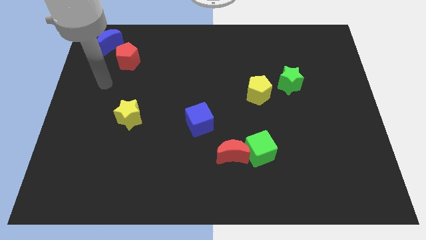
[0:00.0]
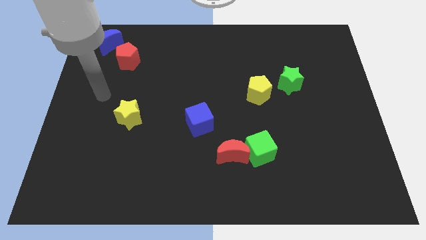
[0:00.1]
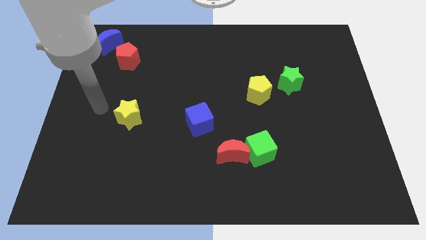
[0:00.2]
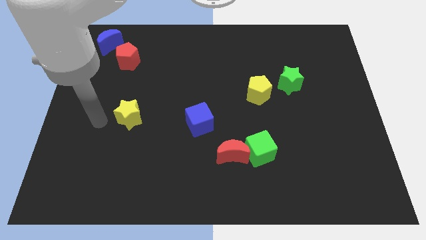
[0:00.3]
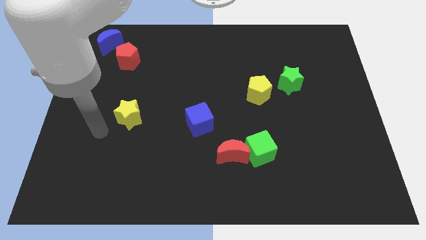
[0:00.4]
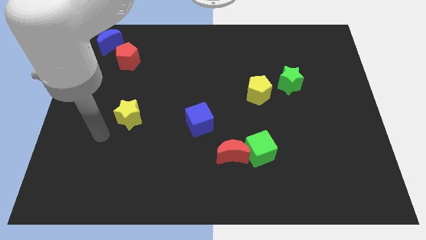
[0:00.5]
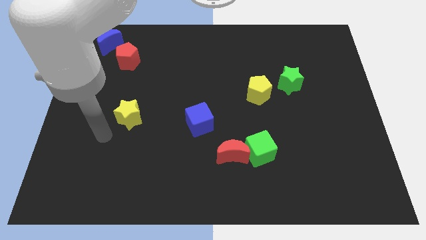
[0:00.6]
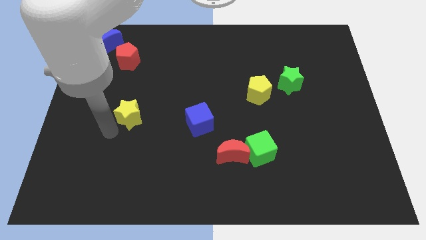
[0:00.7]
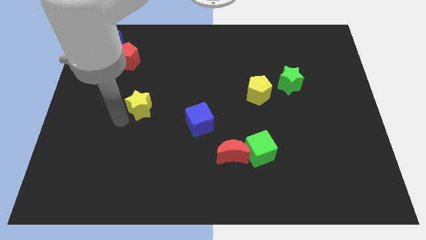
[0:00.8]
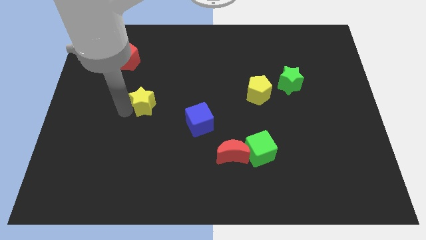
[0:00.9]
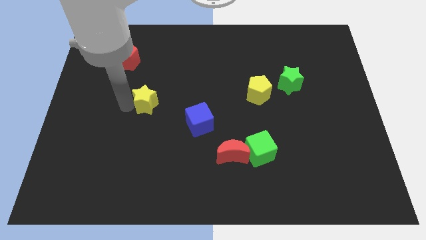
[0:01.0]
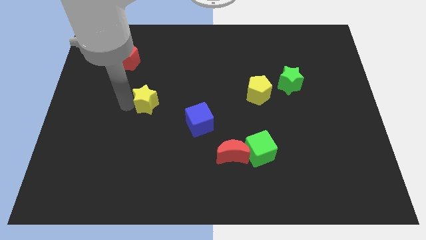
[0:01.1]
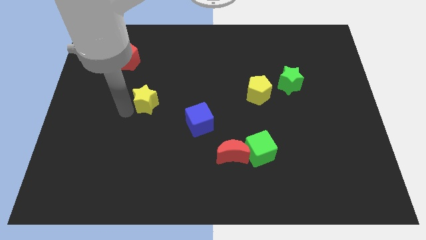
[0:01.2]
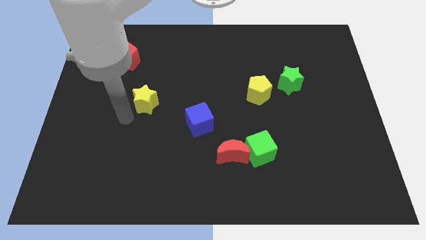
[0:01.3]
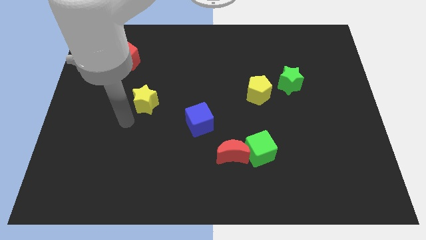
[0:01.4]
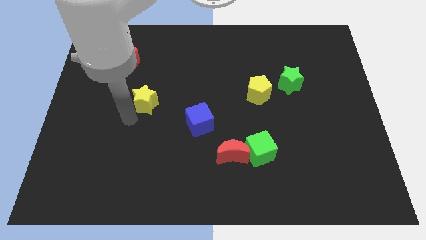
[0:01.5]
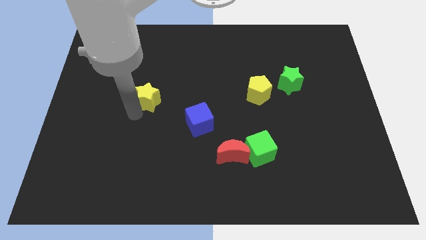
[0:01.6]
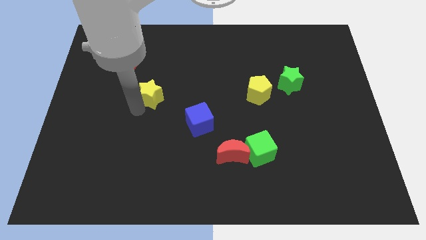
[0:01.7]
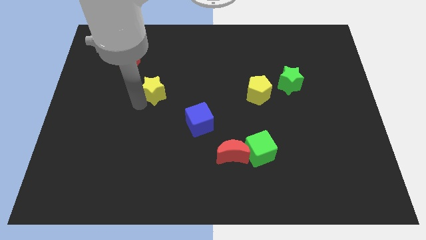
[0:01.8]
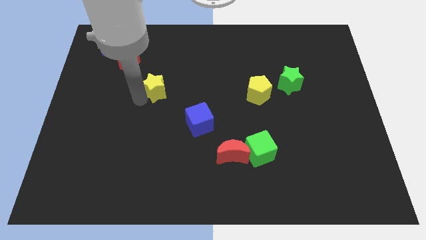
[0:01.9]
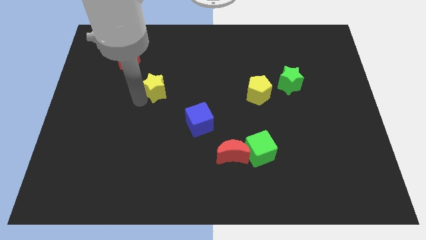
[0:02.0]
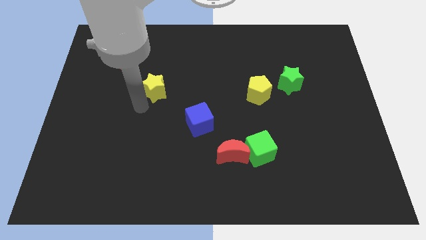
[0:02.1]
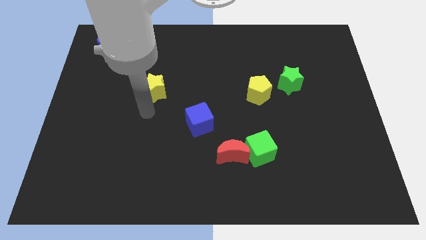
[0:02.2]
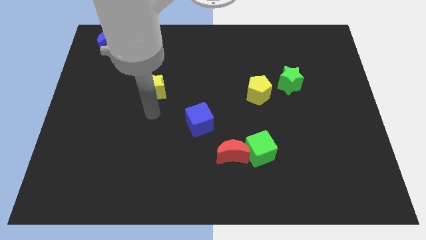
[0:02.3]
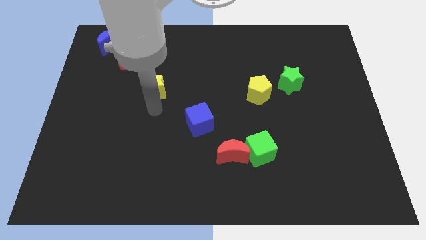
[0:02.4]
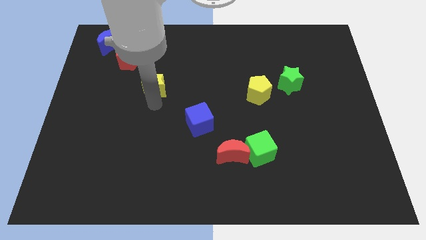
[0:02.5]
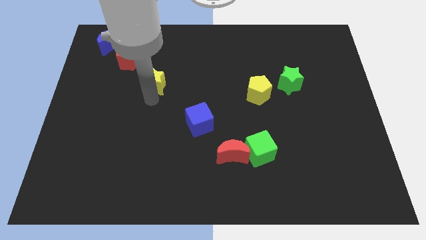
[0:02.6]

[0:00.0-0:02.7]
place the yellow star diagonally in between red pentagon and blue square

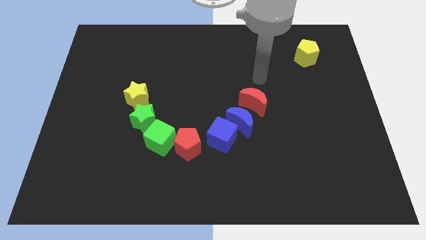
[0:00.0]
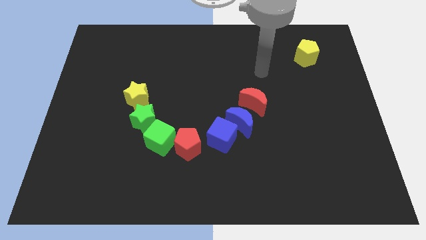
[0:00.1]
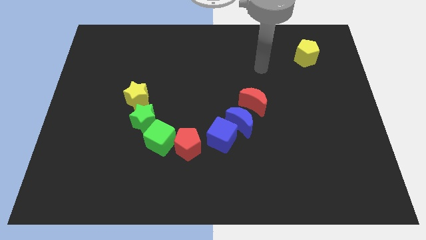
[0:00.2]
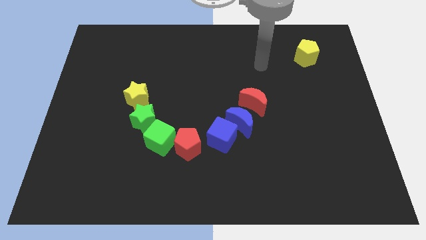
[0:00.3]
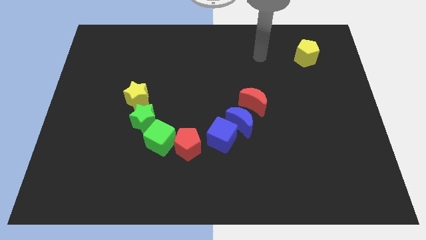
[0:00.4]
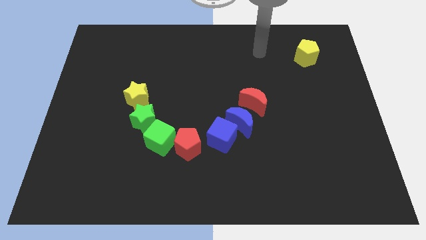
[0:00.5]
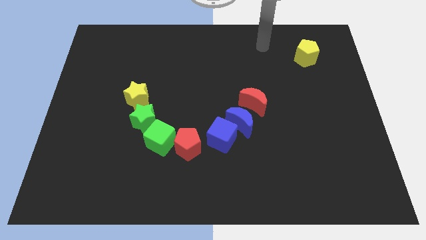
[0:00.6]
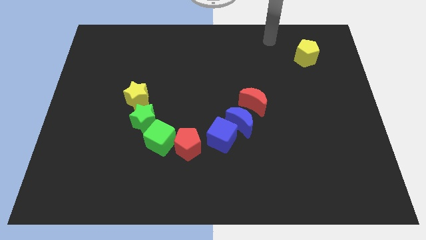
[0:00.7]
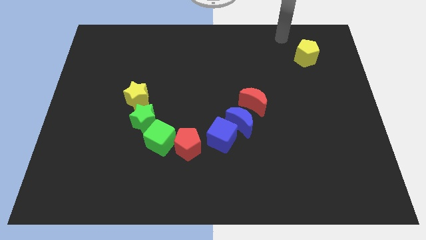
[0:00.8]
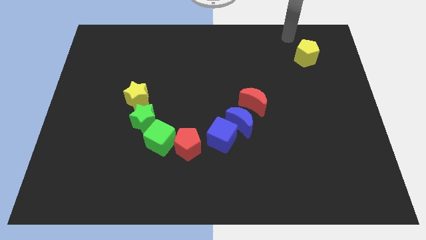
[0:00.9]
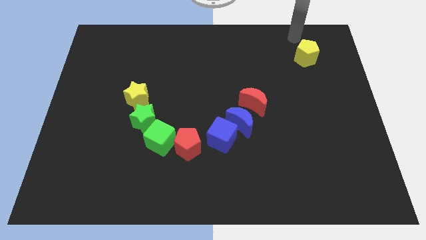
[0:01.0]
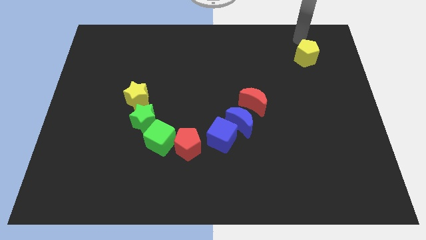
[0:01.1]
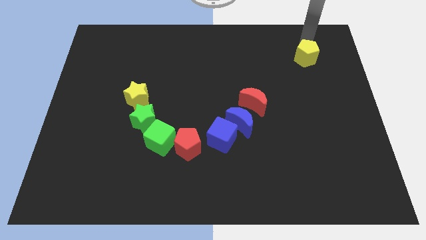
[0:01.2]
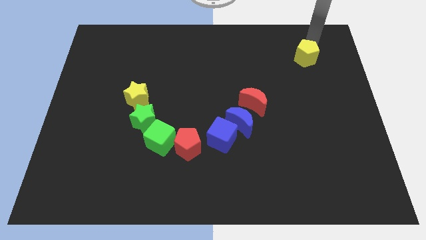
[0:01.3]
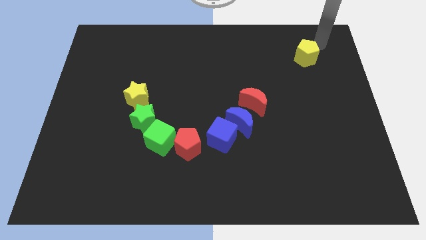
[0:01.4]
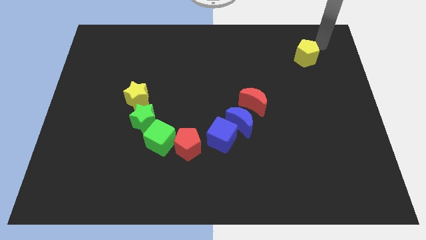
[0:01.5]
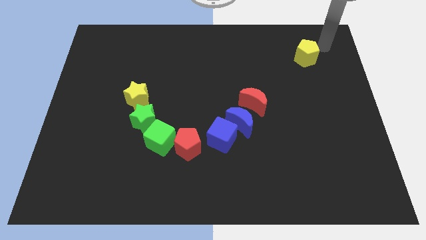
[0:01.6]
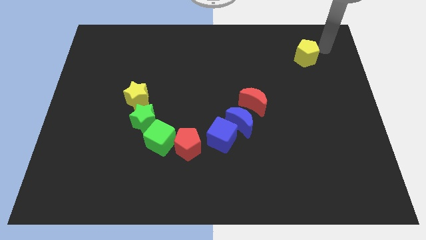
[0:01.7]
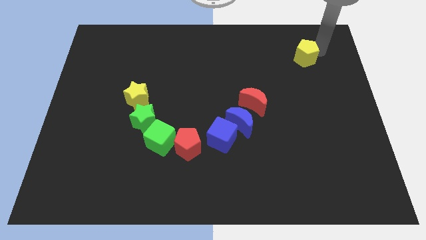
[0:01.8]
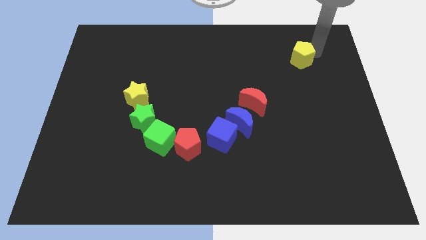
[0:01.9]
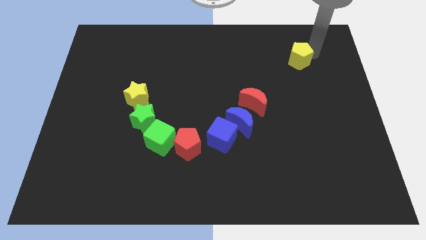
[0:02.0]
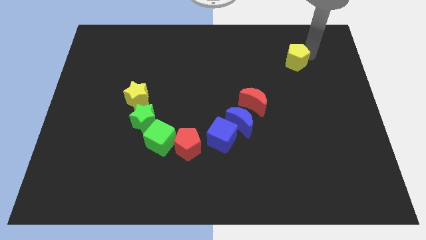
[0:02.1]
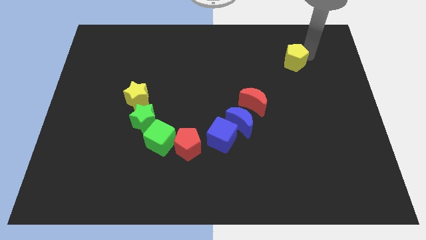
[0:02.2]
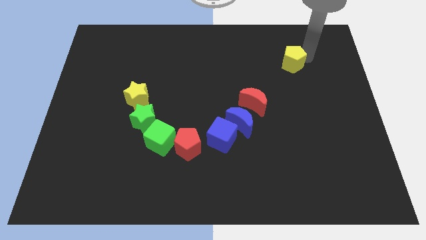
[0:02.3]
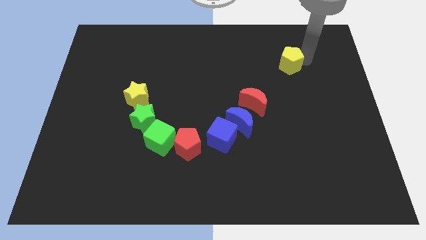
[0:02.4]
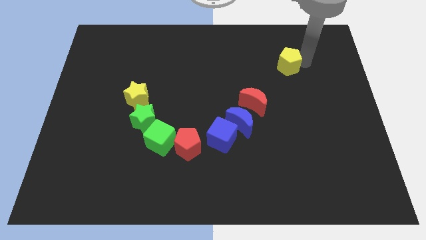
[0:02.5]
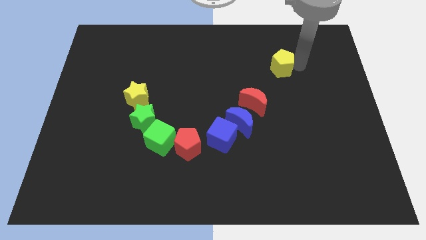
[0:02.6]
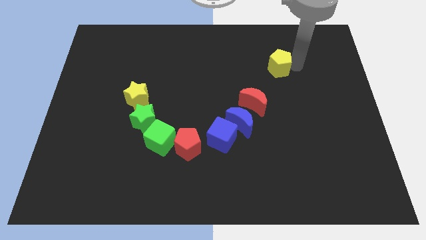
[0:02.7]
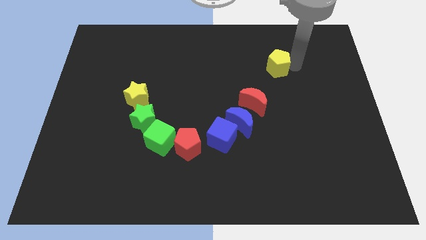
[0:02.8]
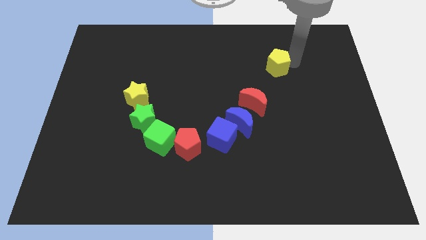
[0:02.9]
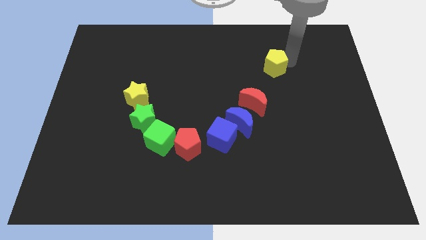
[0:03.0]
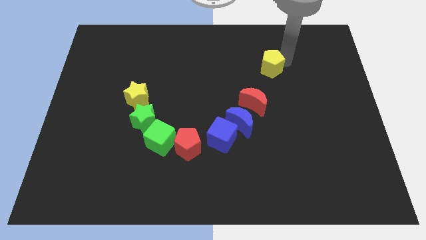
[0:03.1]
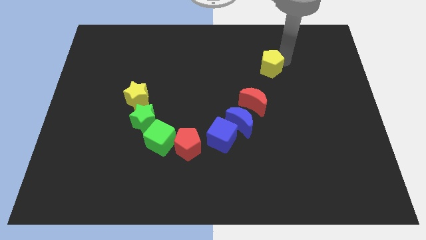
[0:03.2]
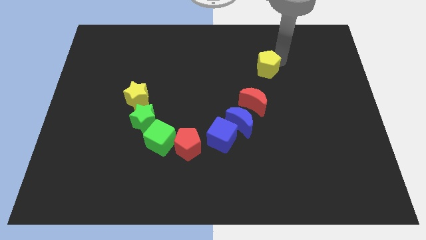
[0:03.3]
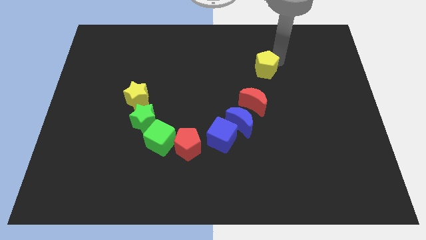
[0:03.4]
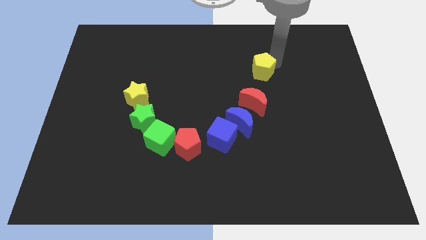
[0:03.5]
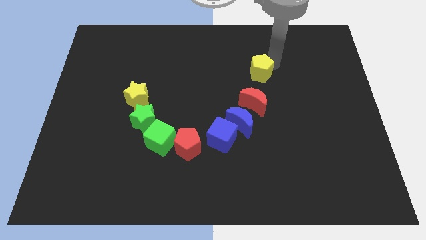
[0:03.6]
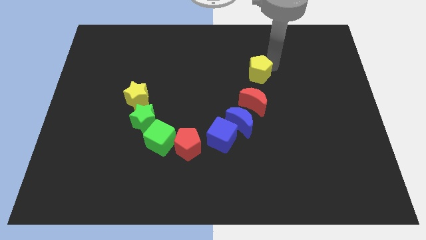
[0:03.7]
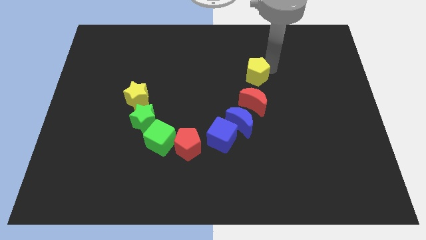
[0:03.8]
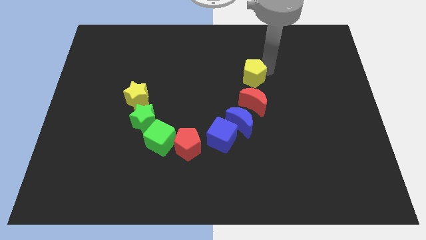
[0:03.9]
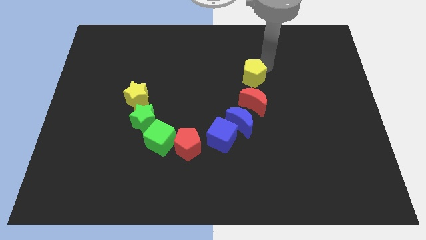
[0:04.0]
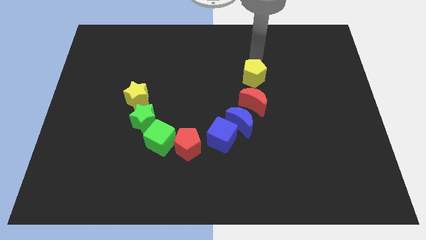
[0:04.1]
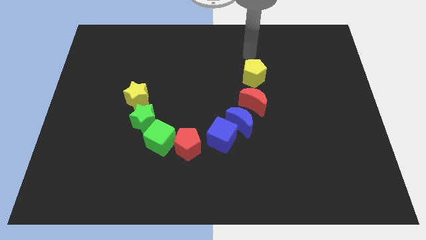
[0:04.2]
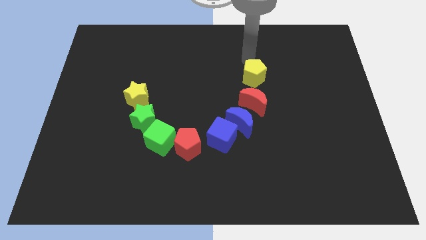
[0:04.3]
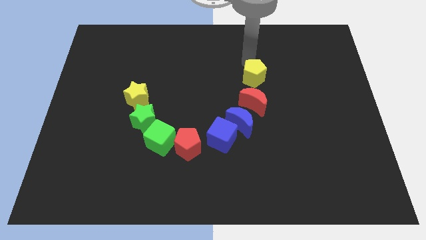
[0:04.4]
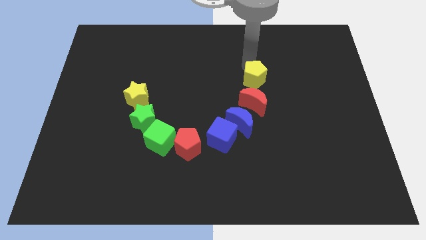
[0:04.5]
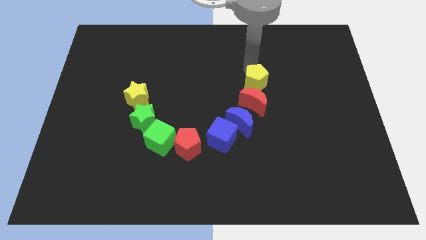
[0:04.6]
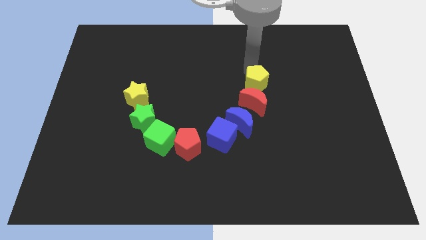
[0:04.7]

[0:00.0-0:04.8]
place the yellow pentagon above the red moon

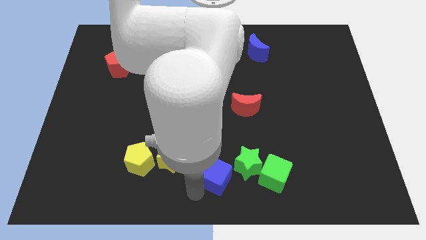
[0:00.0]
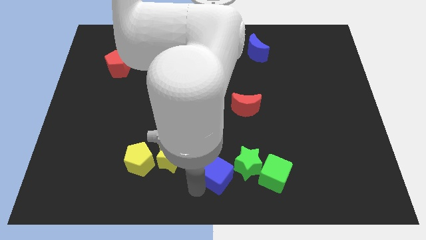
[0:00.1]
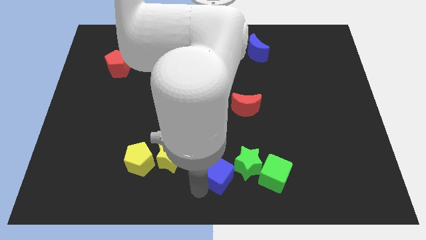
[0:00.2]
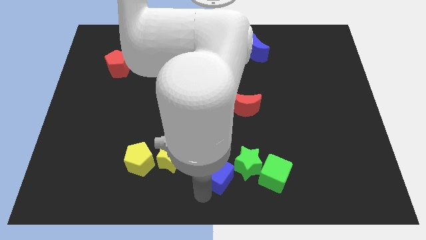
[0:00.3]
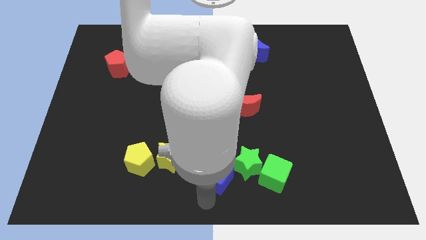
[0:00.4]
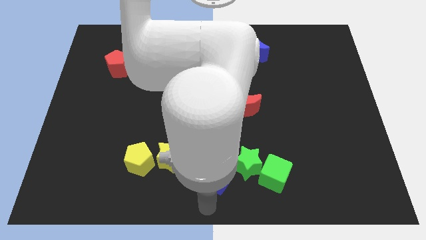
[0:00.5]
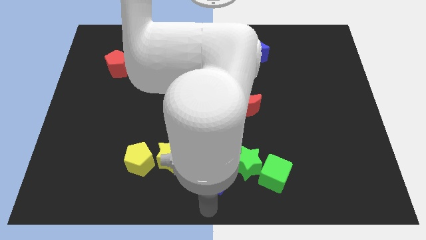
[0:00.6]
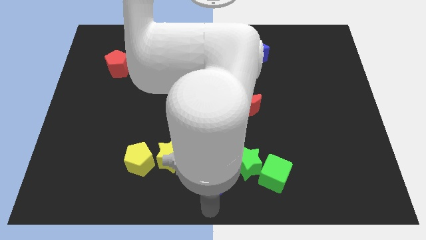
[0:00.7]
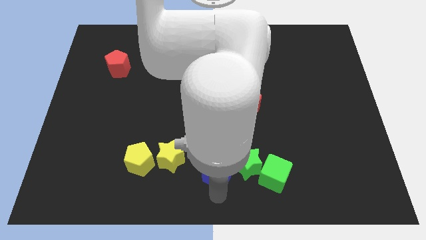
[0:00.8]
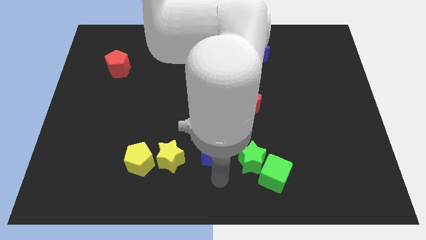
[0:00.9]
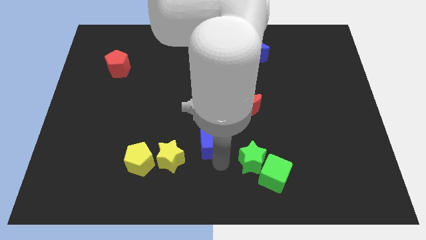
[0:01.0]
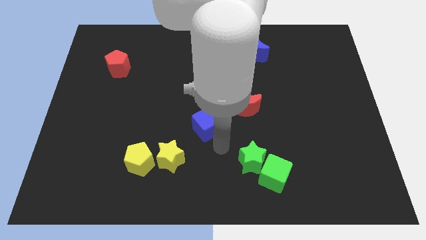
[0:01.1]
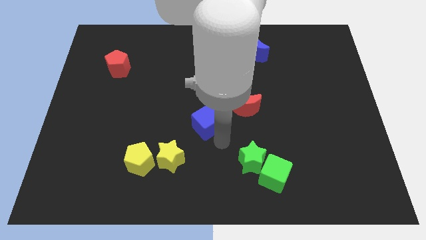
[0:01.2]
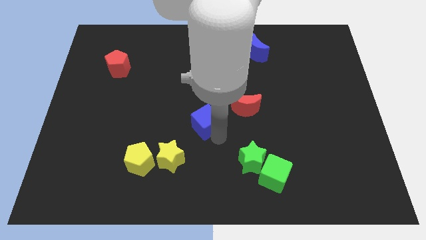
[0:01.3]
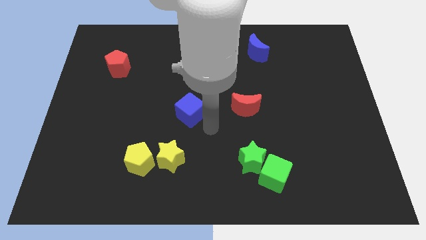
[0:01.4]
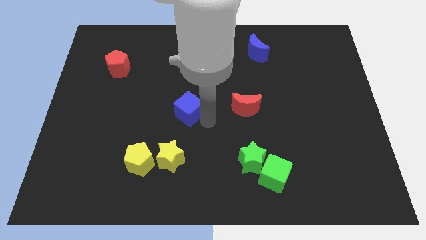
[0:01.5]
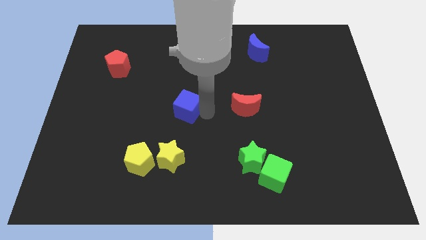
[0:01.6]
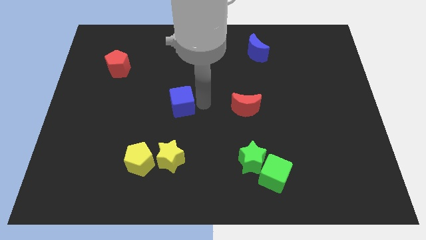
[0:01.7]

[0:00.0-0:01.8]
push the blue cube towards the center of the board
